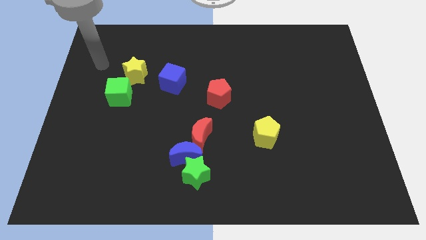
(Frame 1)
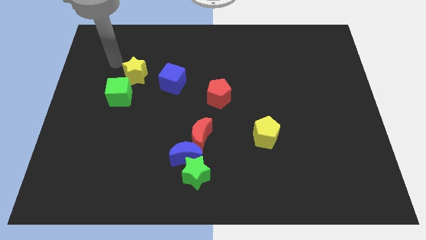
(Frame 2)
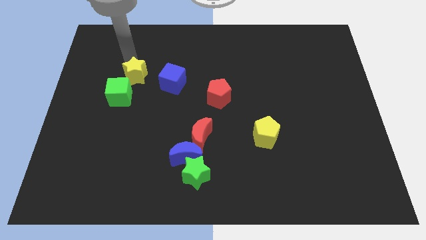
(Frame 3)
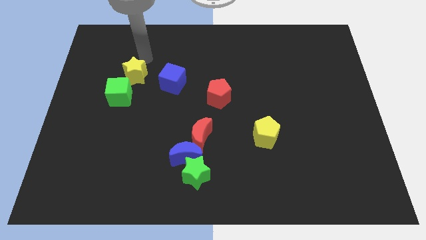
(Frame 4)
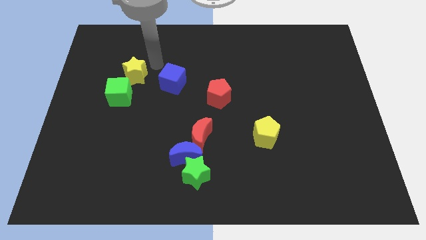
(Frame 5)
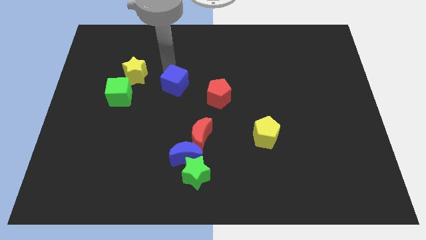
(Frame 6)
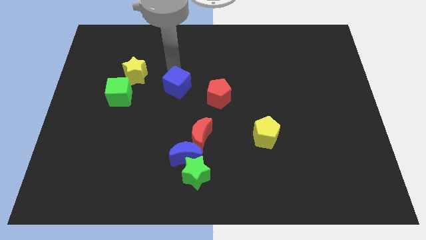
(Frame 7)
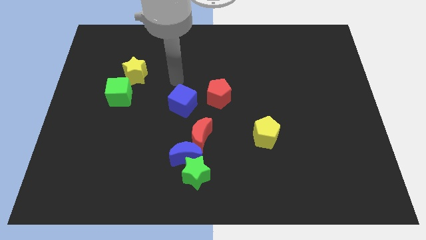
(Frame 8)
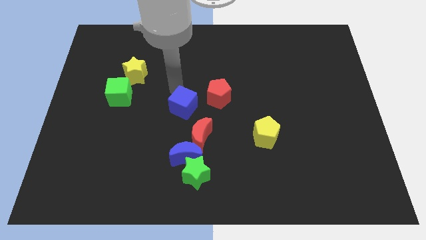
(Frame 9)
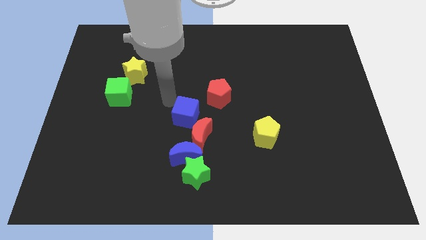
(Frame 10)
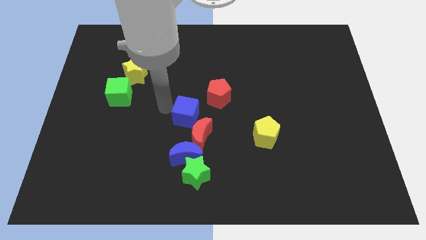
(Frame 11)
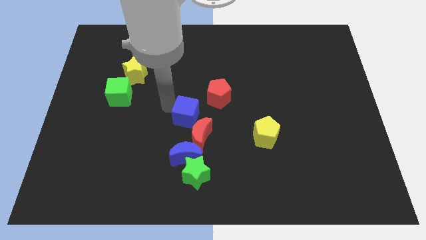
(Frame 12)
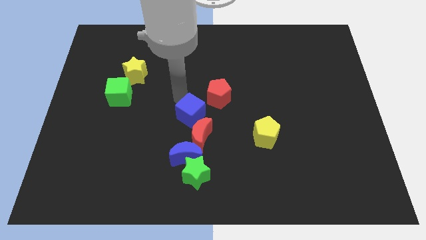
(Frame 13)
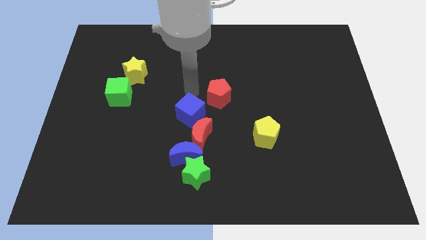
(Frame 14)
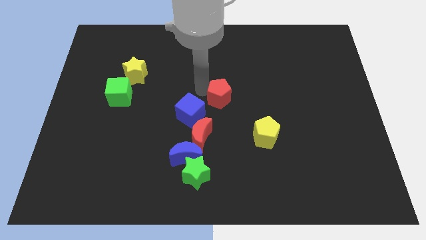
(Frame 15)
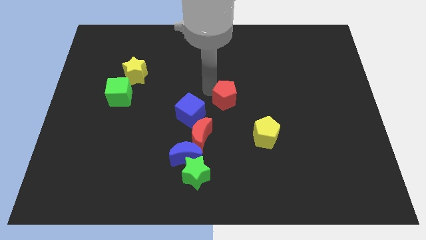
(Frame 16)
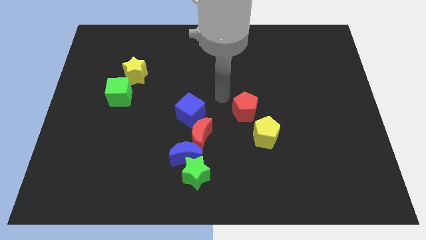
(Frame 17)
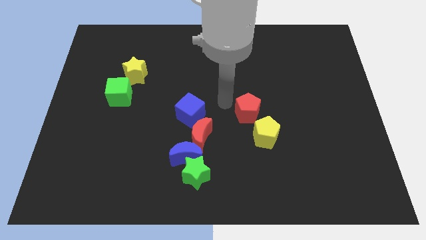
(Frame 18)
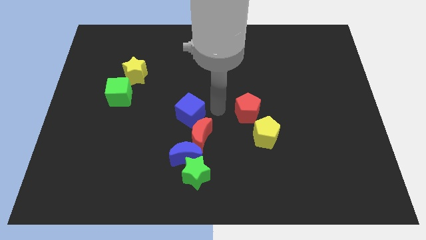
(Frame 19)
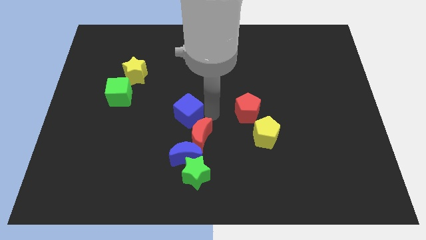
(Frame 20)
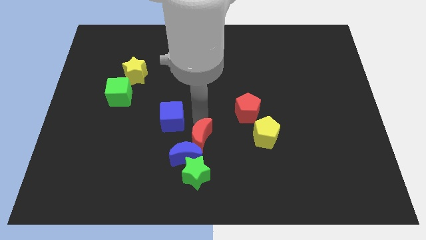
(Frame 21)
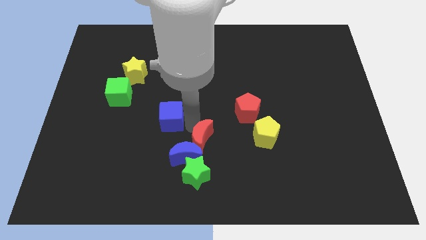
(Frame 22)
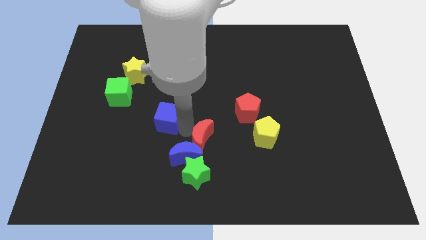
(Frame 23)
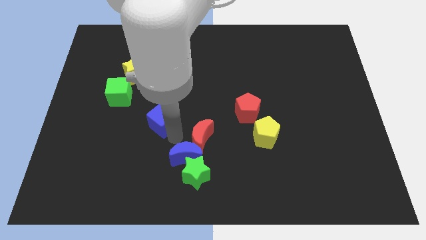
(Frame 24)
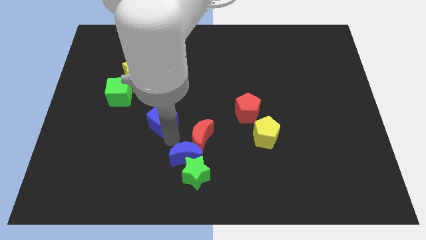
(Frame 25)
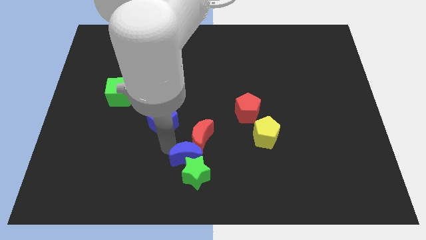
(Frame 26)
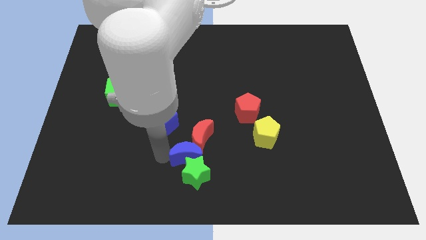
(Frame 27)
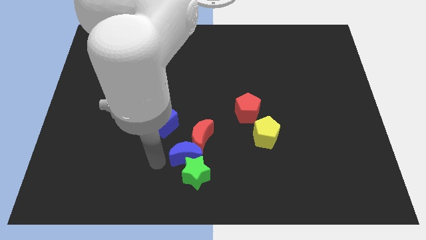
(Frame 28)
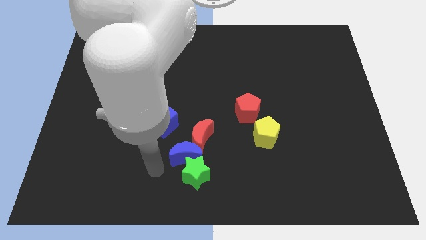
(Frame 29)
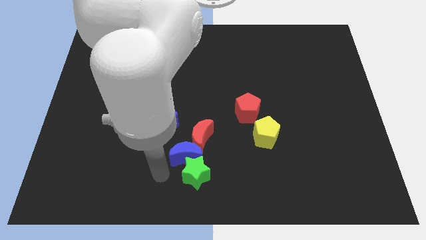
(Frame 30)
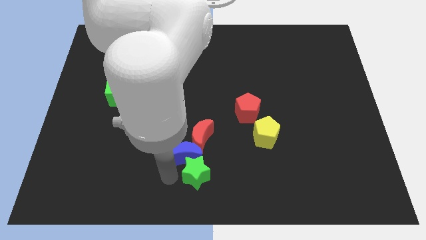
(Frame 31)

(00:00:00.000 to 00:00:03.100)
separate the blue cube and red pentagon

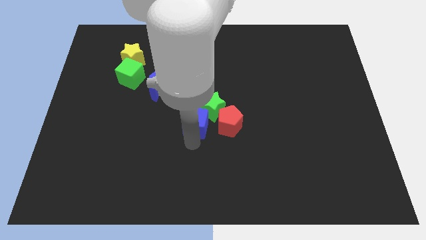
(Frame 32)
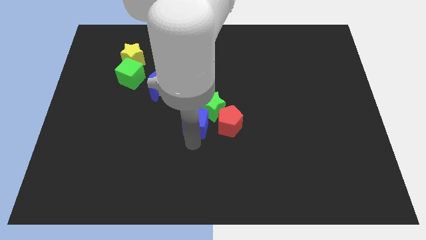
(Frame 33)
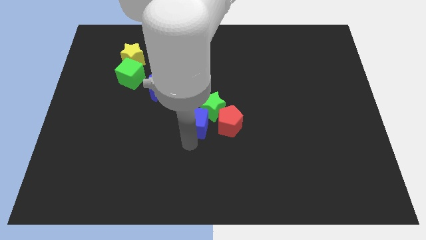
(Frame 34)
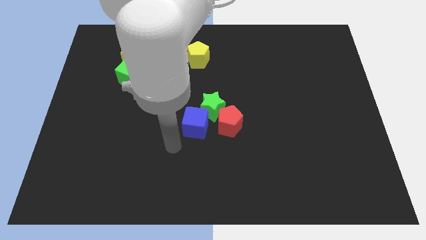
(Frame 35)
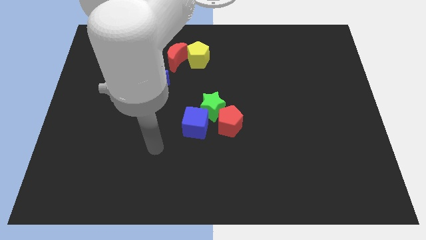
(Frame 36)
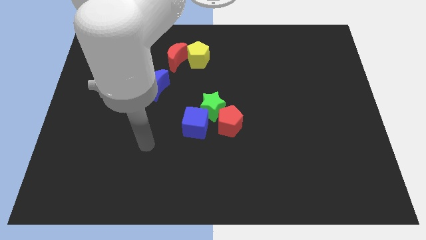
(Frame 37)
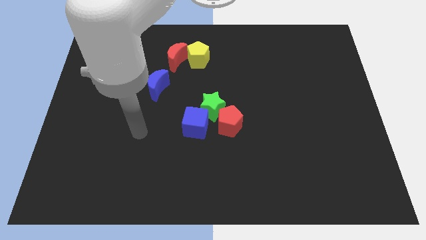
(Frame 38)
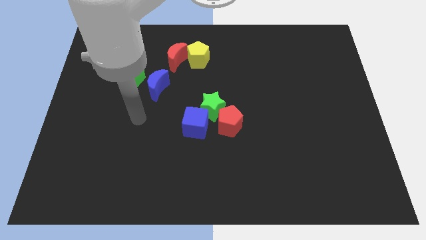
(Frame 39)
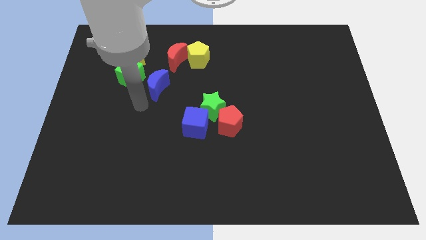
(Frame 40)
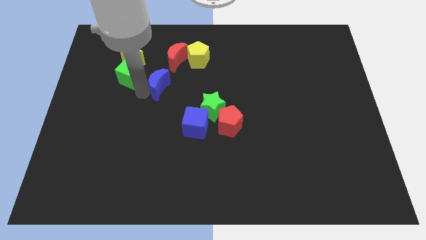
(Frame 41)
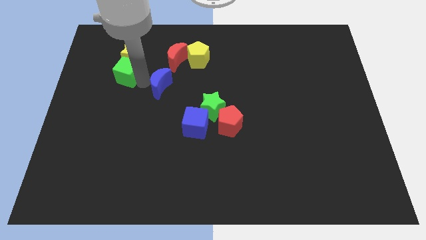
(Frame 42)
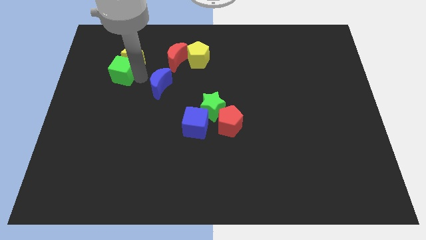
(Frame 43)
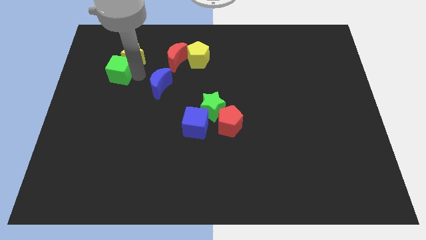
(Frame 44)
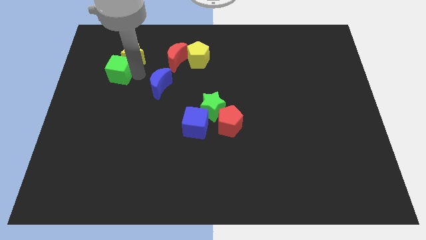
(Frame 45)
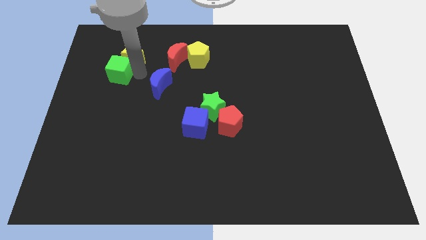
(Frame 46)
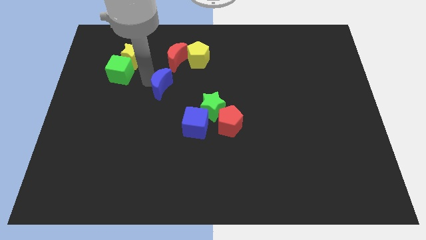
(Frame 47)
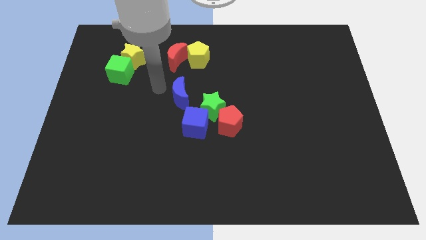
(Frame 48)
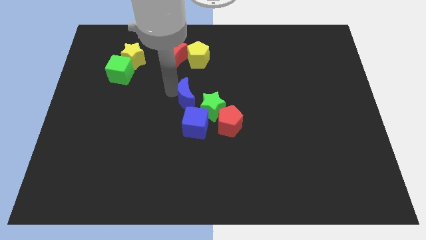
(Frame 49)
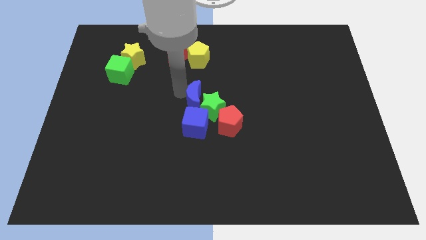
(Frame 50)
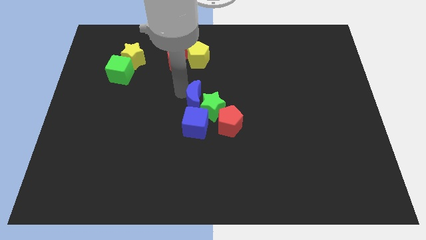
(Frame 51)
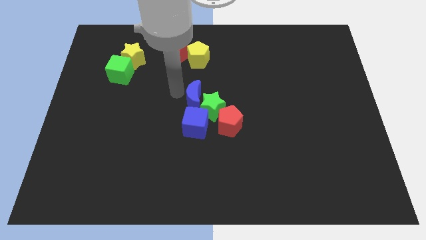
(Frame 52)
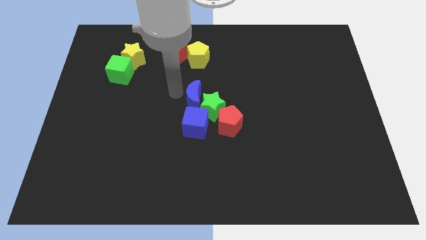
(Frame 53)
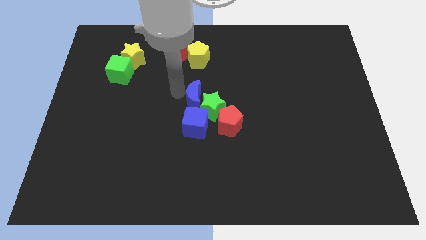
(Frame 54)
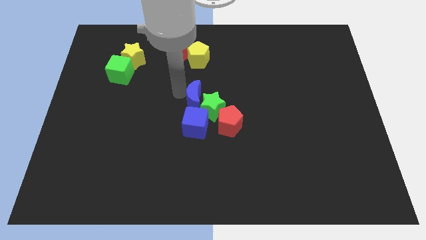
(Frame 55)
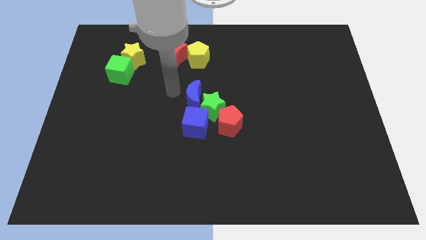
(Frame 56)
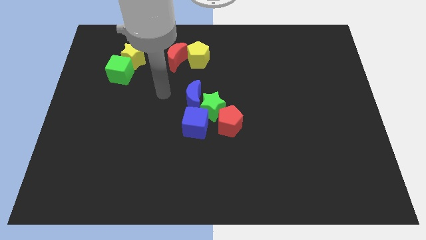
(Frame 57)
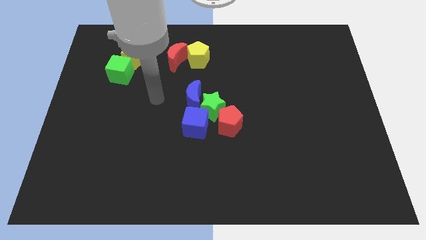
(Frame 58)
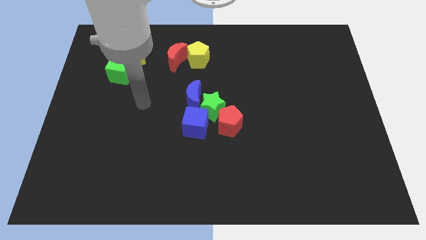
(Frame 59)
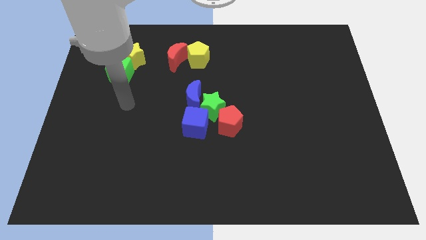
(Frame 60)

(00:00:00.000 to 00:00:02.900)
move the blue moon left beside the green star

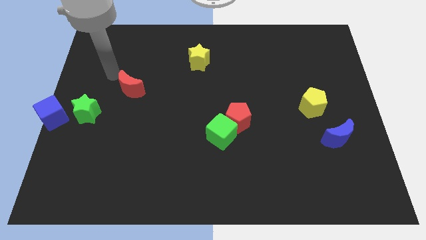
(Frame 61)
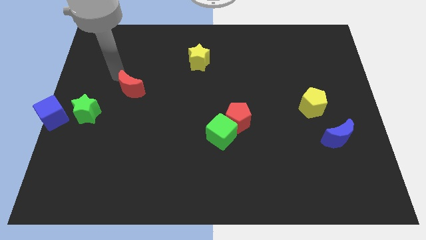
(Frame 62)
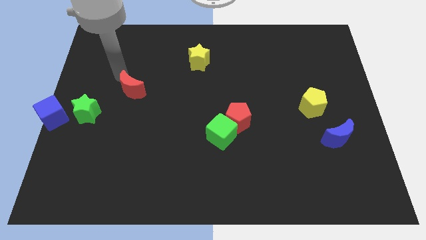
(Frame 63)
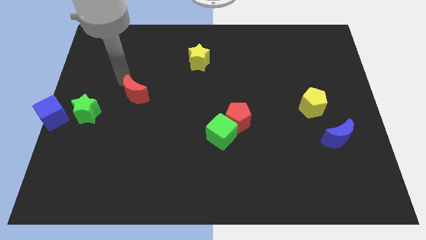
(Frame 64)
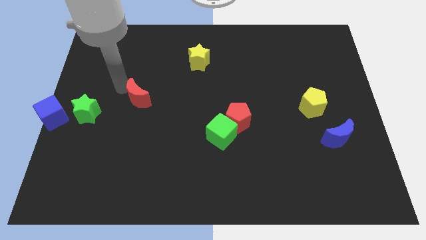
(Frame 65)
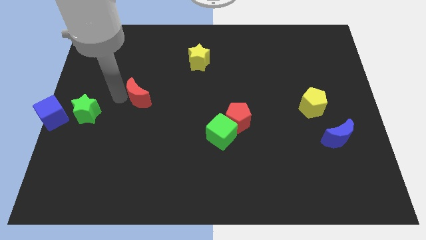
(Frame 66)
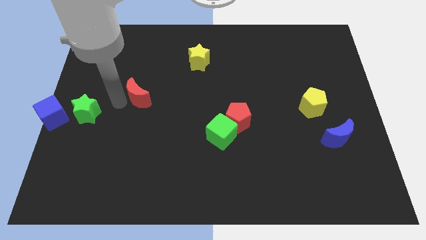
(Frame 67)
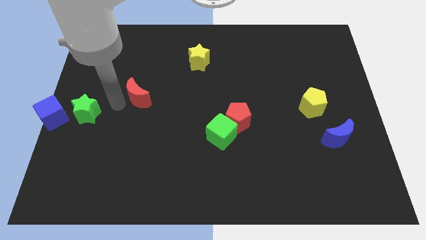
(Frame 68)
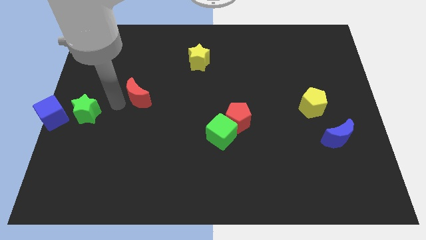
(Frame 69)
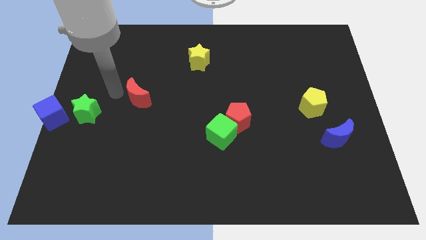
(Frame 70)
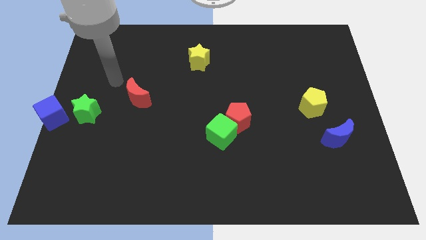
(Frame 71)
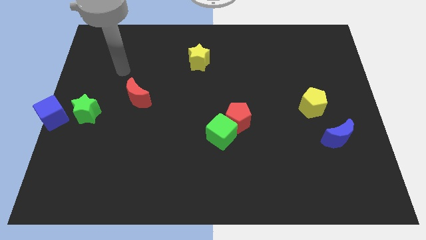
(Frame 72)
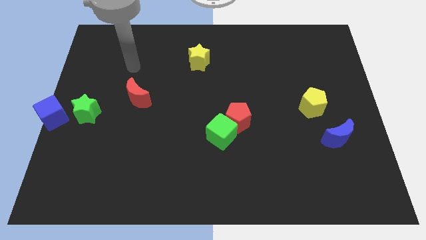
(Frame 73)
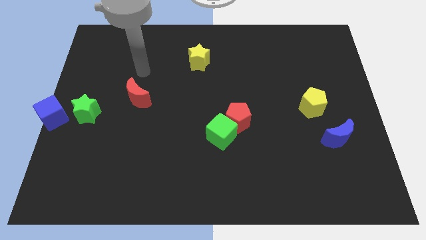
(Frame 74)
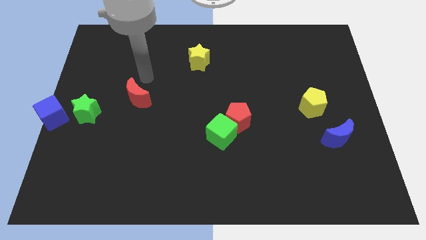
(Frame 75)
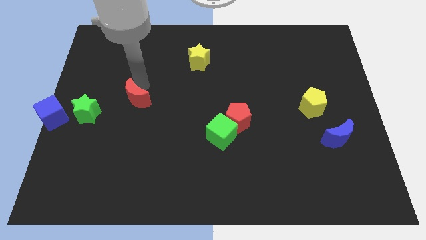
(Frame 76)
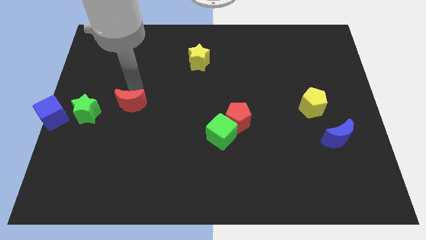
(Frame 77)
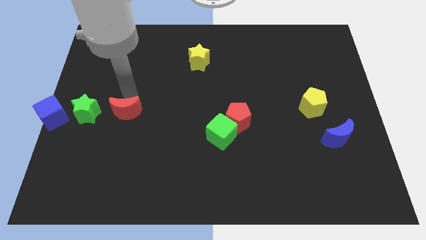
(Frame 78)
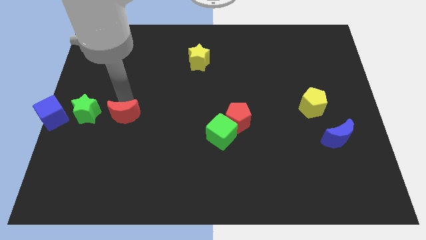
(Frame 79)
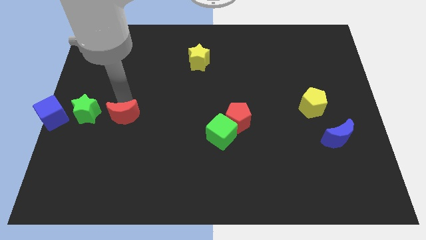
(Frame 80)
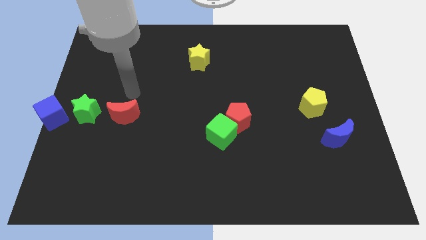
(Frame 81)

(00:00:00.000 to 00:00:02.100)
put the red crescent to the right of the green star

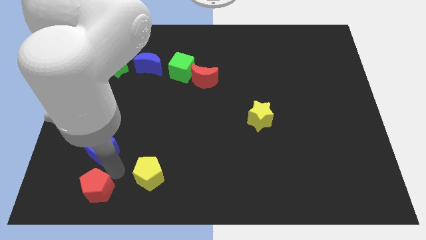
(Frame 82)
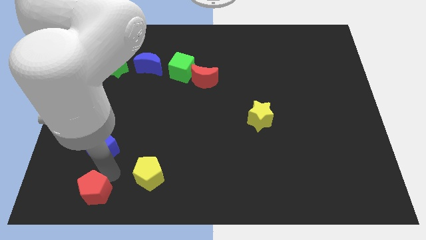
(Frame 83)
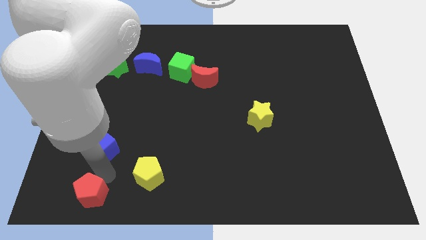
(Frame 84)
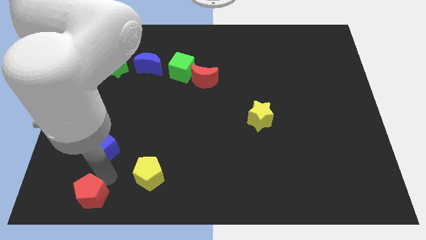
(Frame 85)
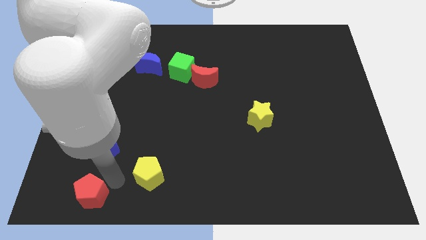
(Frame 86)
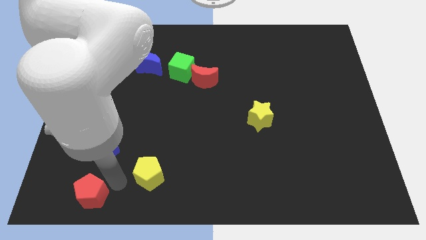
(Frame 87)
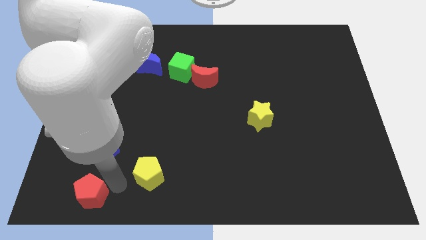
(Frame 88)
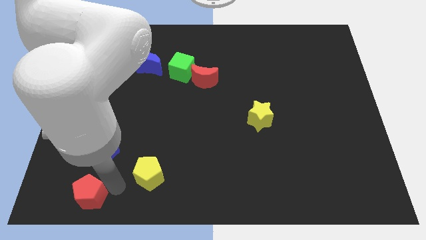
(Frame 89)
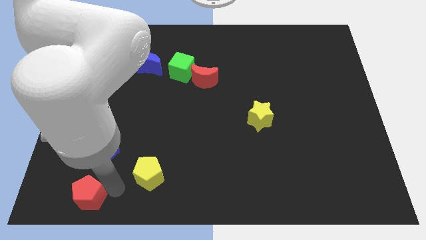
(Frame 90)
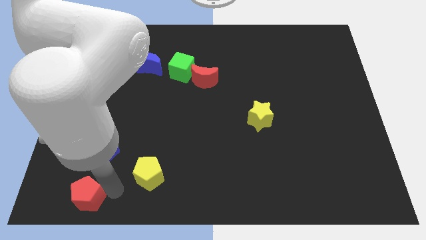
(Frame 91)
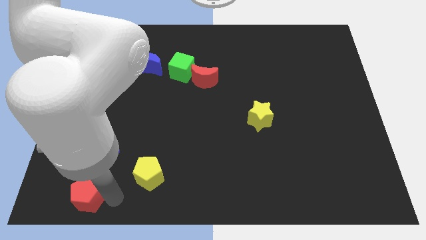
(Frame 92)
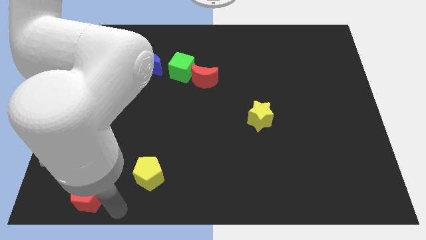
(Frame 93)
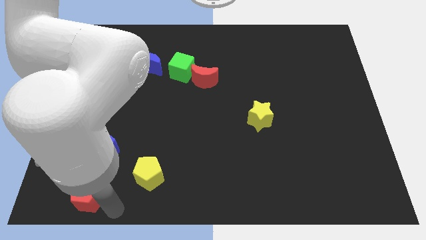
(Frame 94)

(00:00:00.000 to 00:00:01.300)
push the red pentagon slightly downwards
